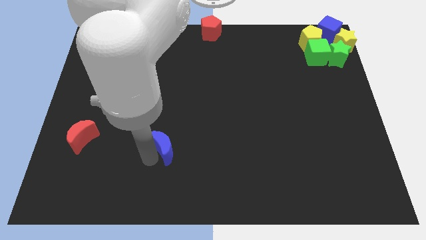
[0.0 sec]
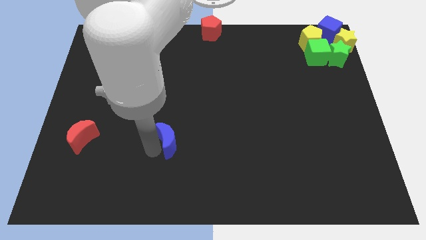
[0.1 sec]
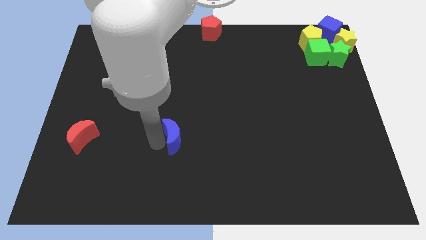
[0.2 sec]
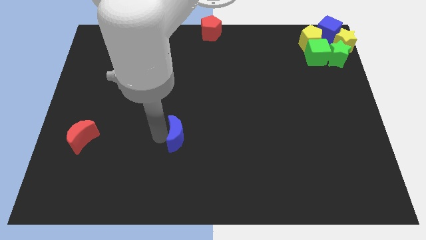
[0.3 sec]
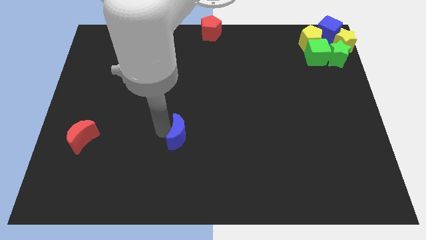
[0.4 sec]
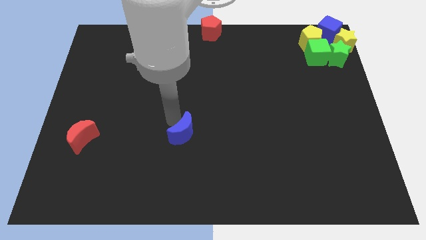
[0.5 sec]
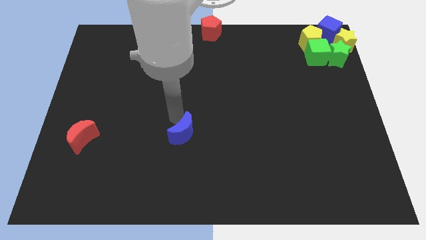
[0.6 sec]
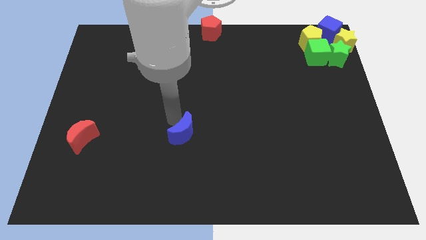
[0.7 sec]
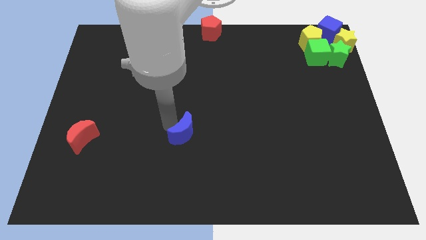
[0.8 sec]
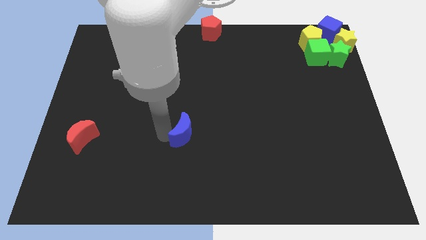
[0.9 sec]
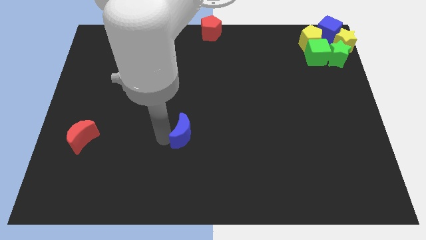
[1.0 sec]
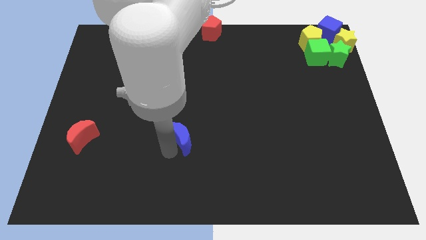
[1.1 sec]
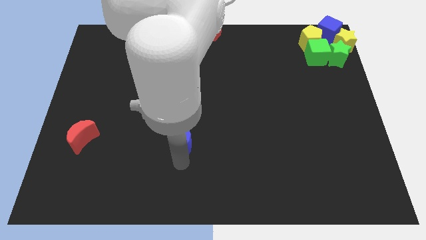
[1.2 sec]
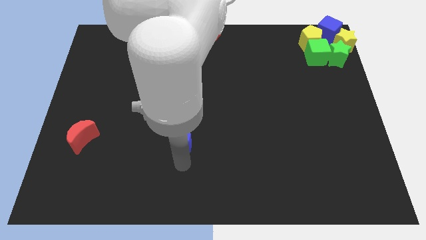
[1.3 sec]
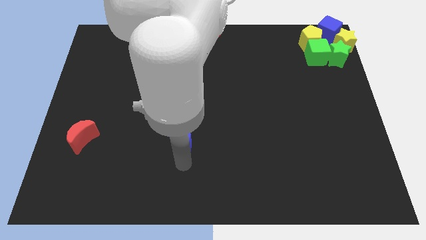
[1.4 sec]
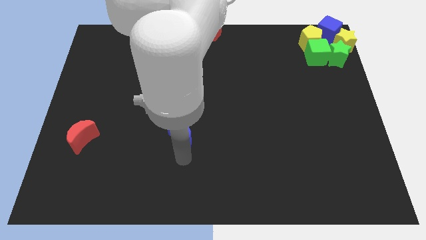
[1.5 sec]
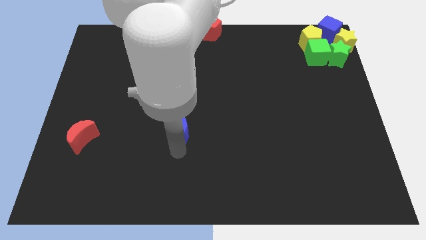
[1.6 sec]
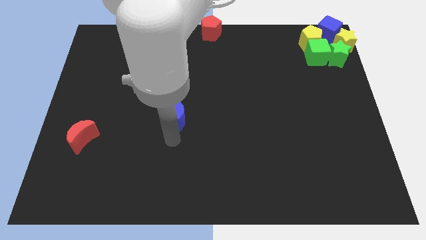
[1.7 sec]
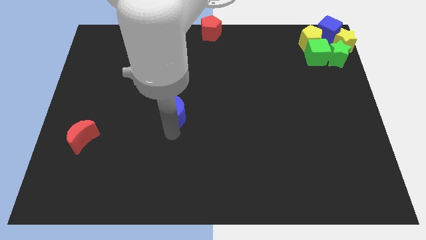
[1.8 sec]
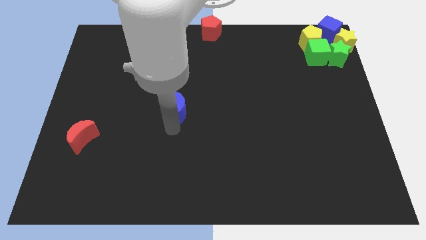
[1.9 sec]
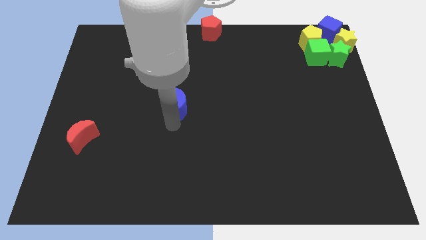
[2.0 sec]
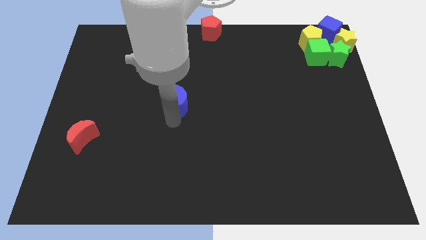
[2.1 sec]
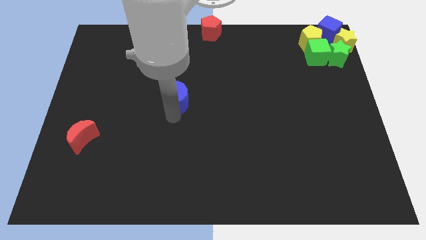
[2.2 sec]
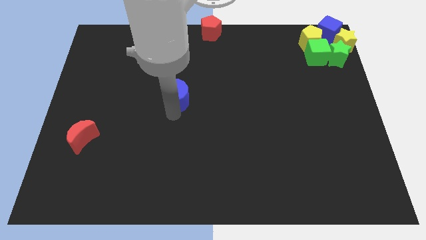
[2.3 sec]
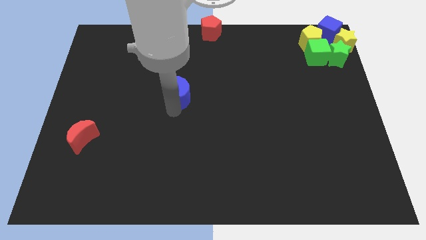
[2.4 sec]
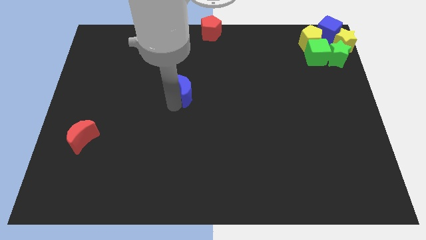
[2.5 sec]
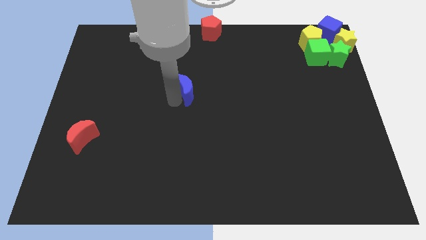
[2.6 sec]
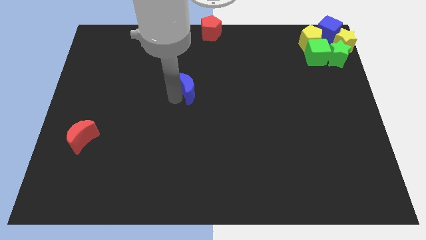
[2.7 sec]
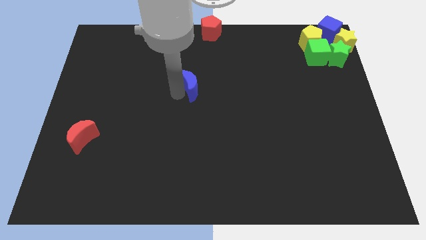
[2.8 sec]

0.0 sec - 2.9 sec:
slide the blue moon diagonally to the top right of red moon

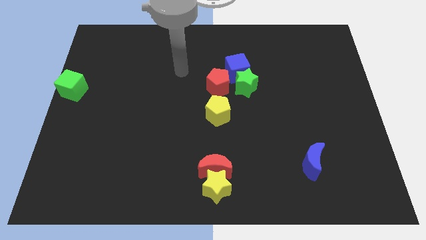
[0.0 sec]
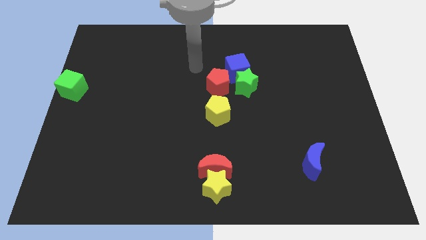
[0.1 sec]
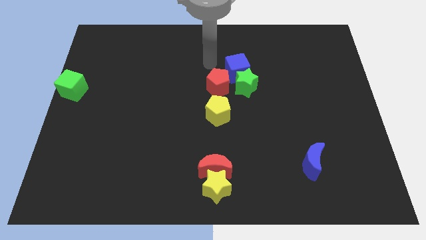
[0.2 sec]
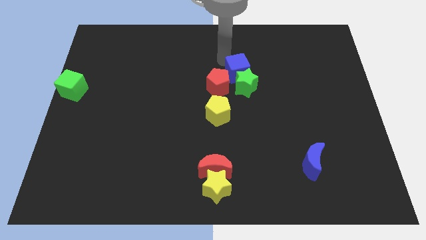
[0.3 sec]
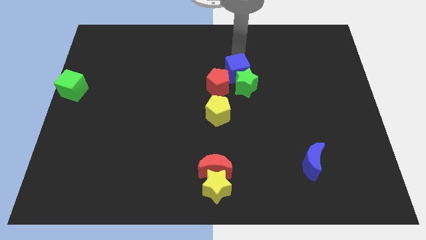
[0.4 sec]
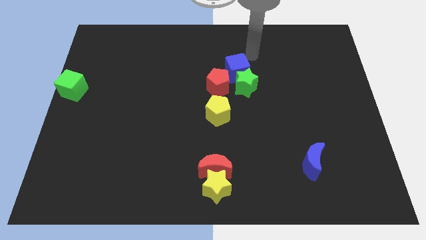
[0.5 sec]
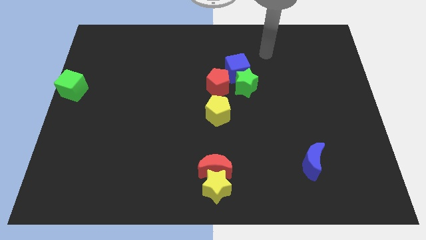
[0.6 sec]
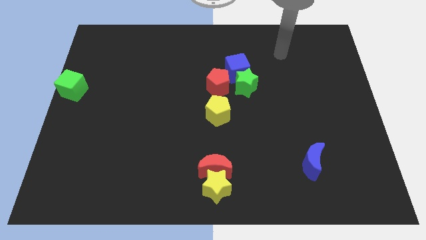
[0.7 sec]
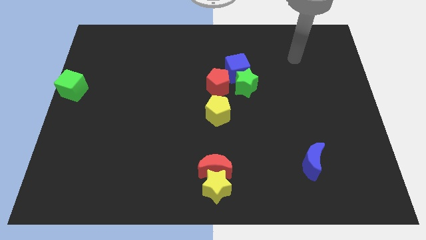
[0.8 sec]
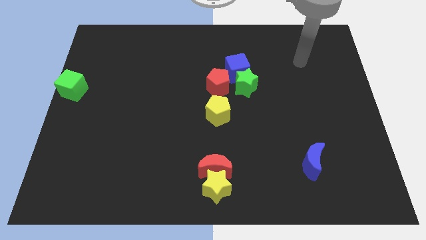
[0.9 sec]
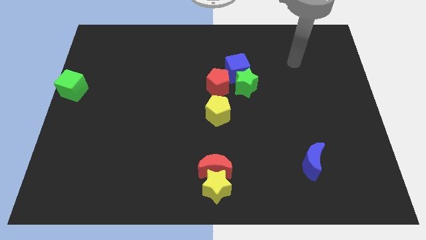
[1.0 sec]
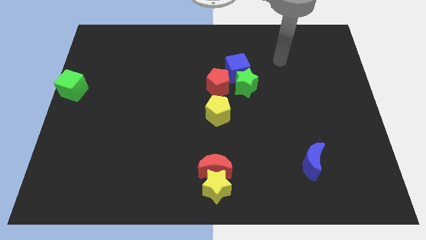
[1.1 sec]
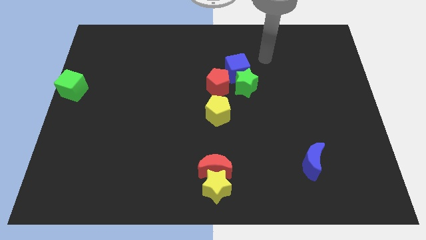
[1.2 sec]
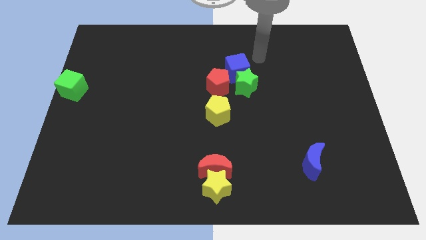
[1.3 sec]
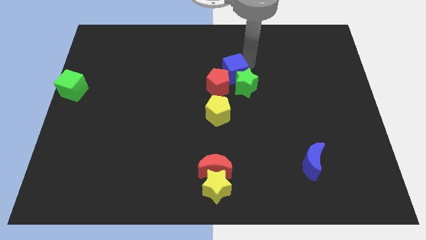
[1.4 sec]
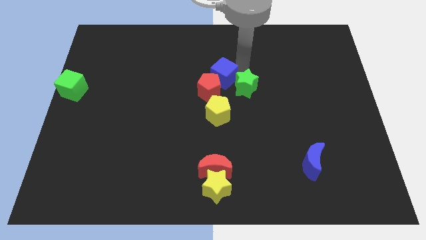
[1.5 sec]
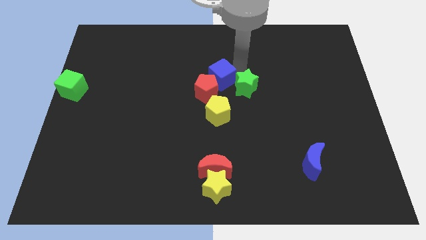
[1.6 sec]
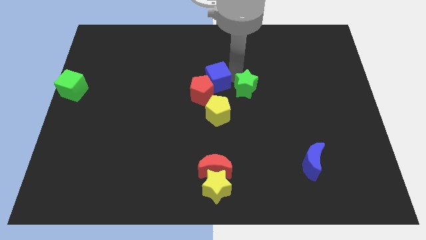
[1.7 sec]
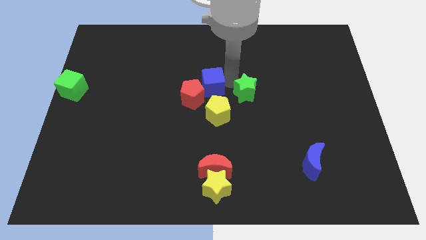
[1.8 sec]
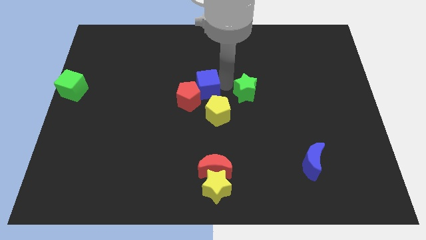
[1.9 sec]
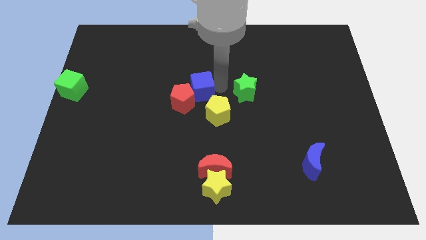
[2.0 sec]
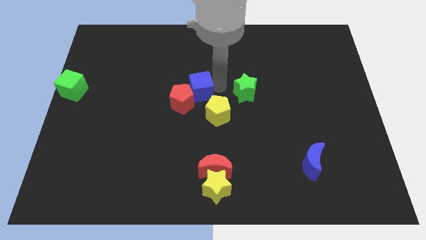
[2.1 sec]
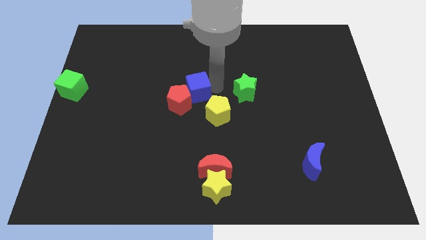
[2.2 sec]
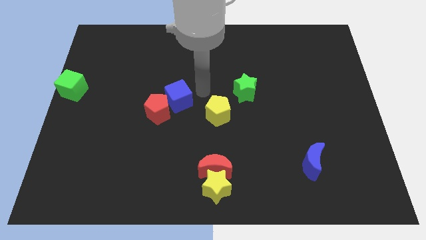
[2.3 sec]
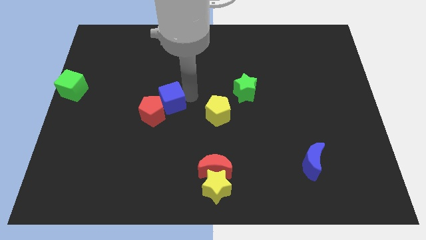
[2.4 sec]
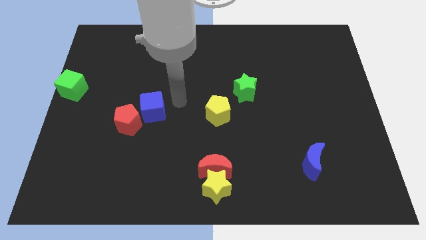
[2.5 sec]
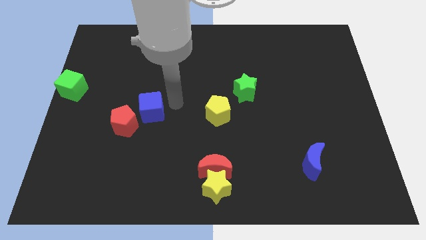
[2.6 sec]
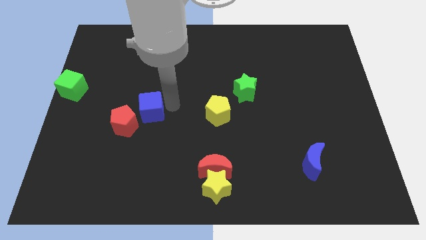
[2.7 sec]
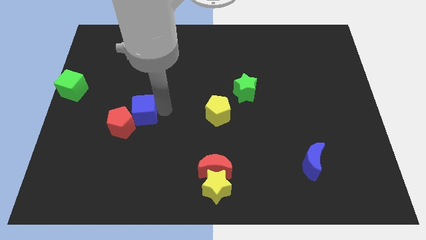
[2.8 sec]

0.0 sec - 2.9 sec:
push the blue cube and the red pentagon towards bottom

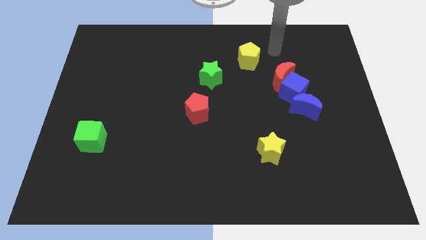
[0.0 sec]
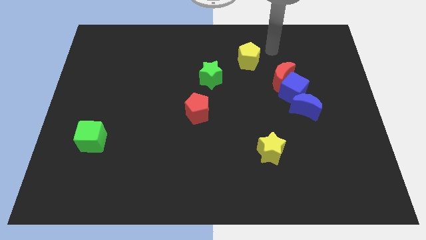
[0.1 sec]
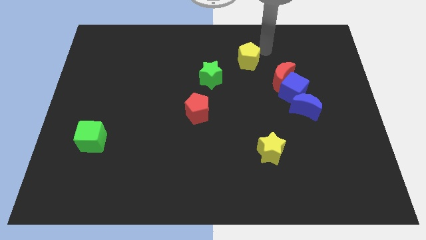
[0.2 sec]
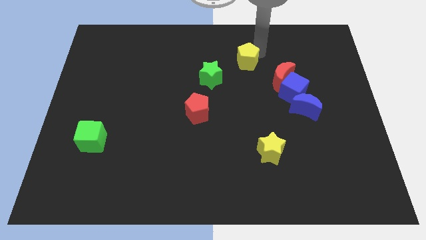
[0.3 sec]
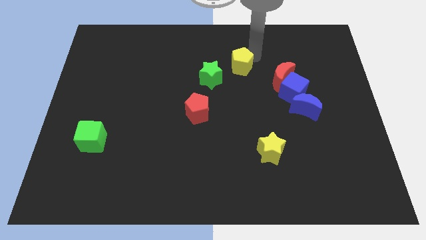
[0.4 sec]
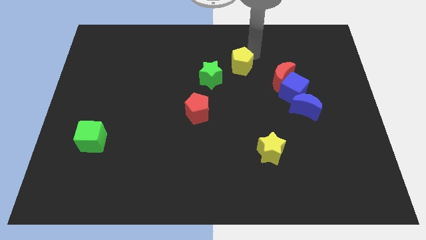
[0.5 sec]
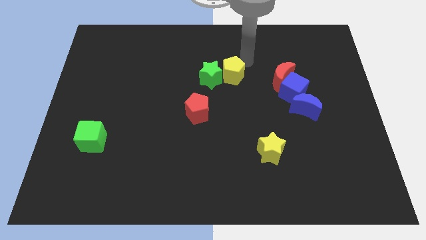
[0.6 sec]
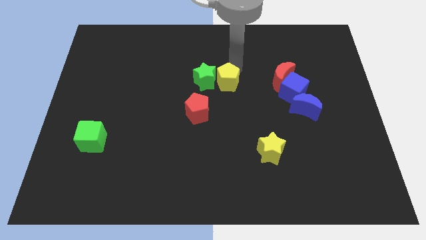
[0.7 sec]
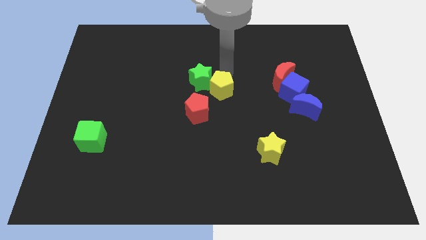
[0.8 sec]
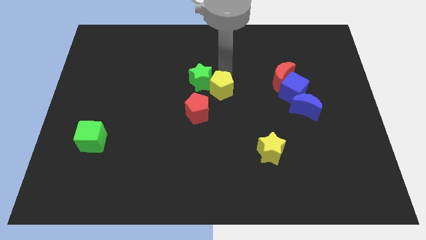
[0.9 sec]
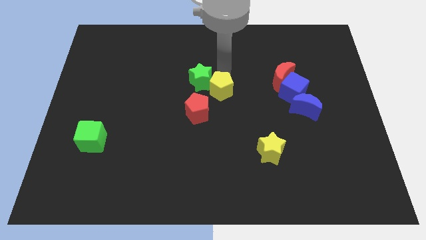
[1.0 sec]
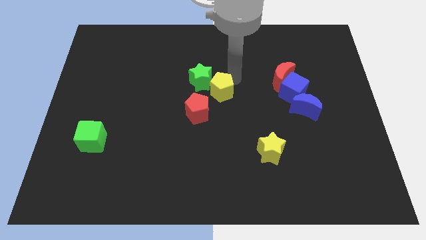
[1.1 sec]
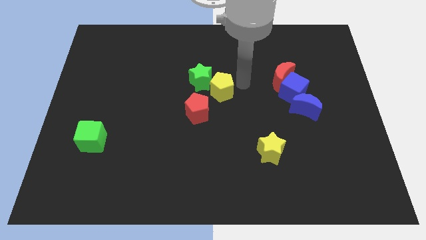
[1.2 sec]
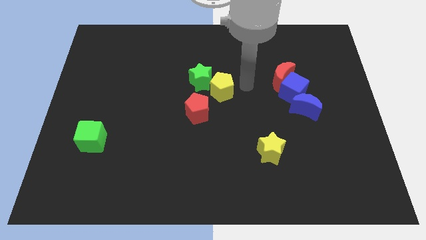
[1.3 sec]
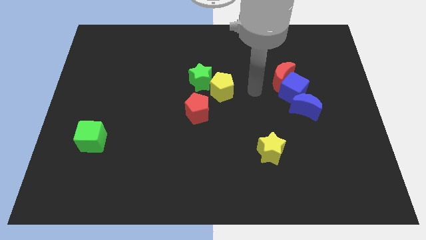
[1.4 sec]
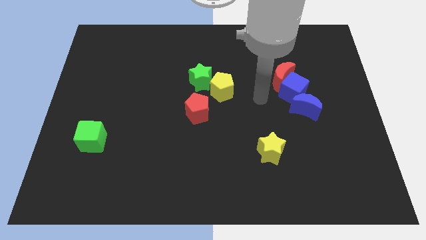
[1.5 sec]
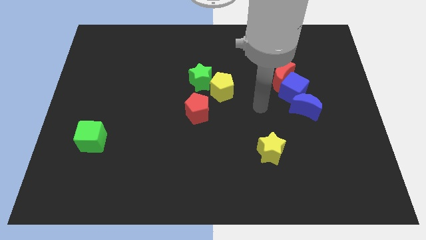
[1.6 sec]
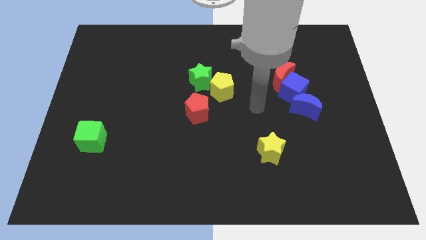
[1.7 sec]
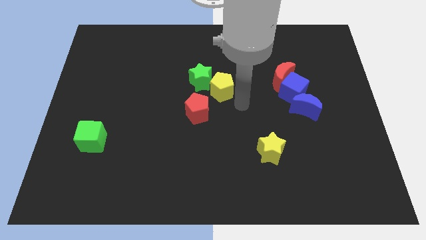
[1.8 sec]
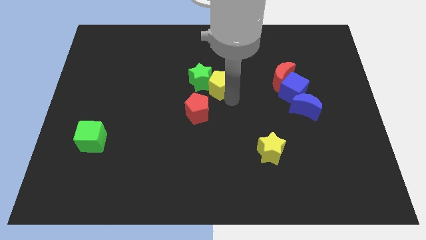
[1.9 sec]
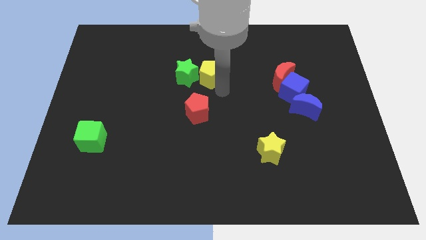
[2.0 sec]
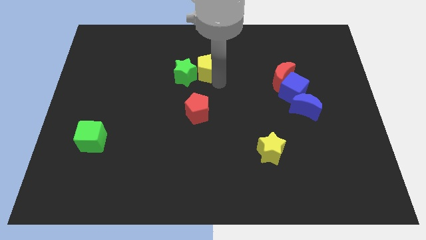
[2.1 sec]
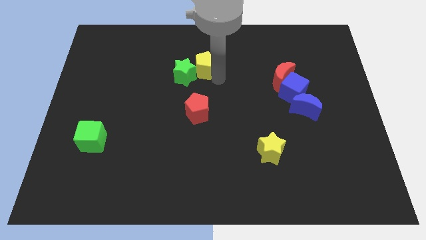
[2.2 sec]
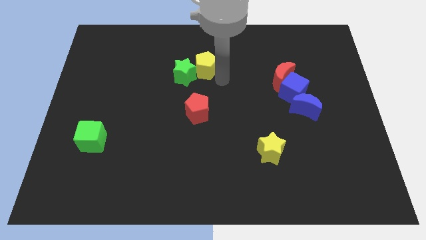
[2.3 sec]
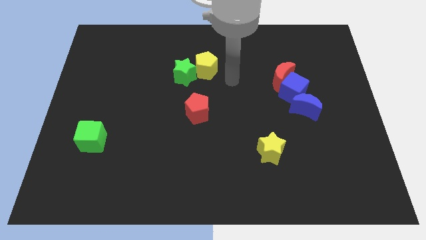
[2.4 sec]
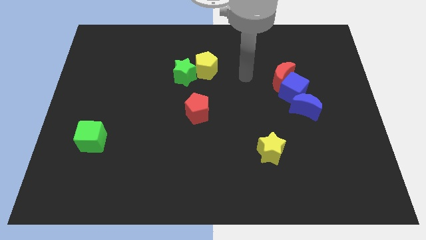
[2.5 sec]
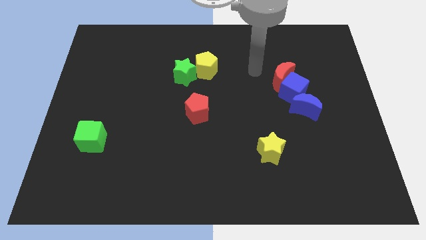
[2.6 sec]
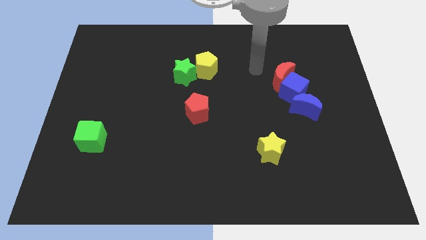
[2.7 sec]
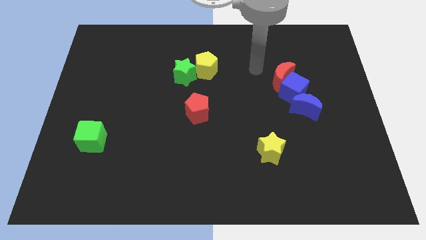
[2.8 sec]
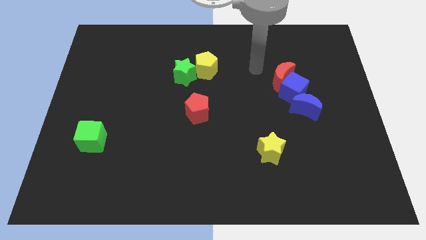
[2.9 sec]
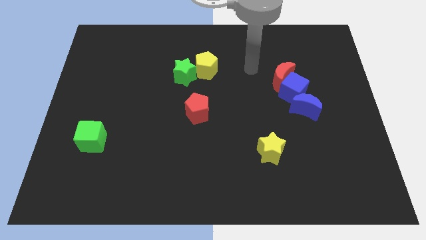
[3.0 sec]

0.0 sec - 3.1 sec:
move the yellow pentagon into the green star
